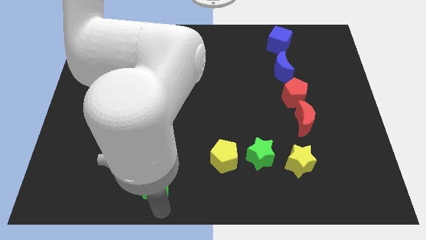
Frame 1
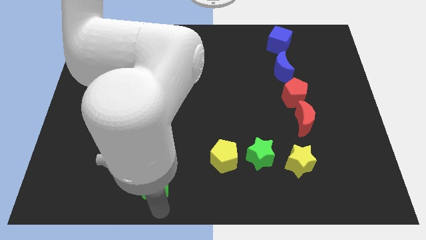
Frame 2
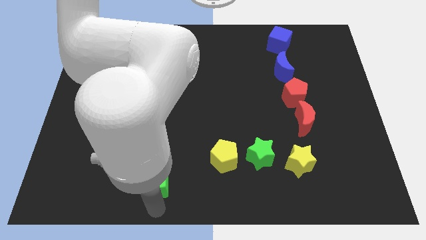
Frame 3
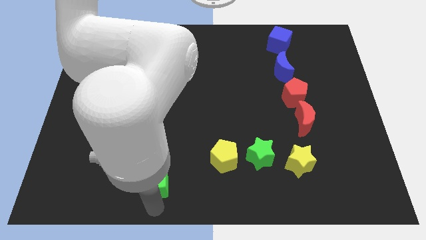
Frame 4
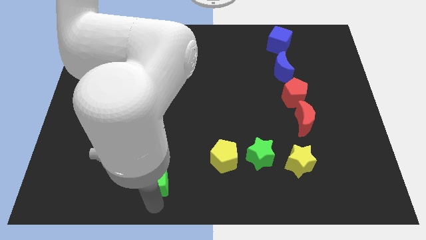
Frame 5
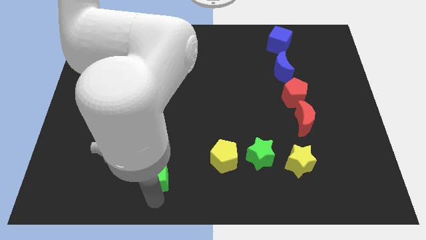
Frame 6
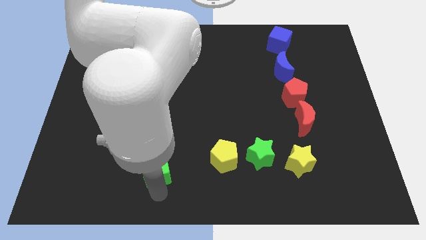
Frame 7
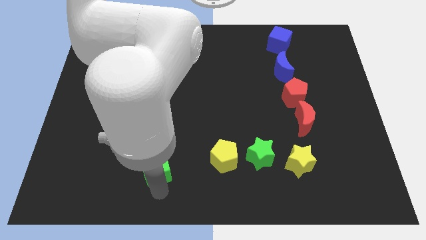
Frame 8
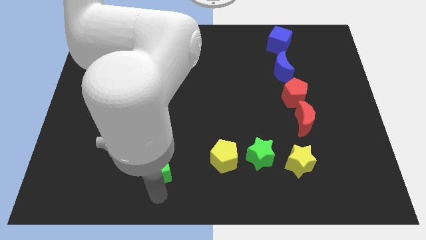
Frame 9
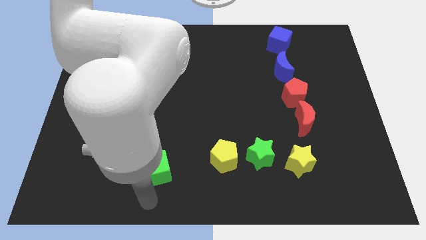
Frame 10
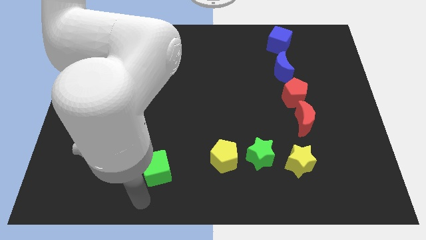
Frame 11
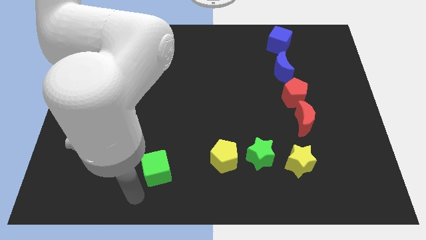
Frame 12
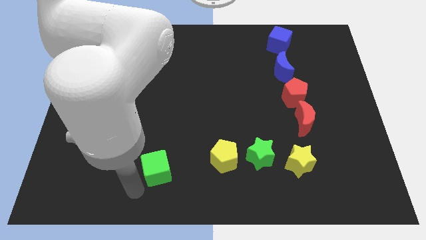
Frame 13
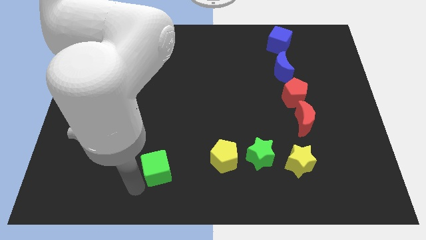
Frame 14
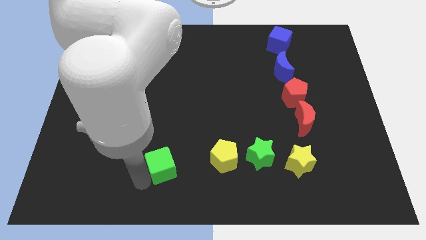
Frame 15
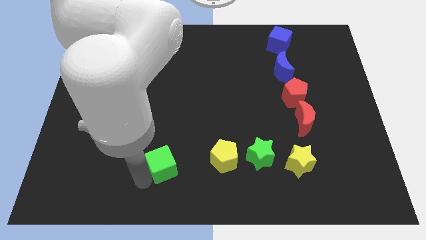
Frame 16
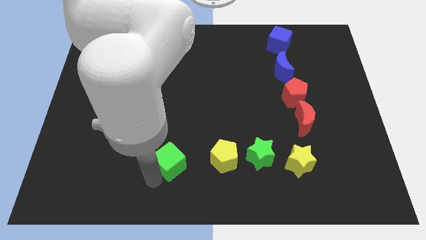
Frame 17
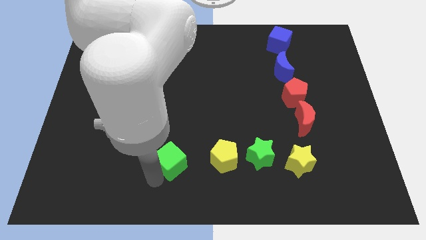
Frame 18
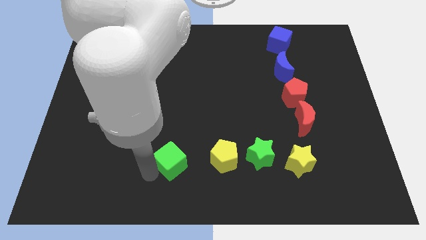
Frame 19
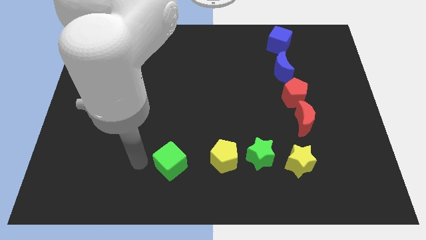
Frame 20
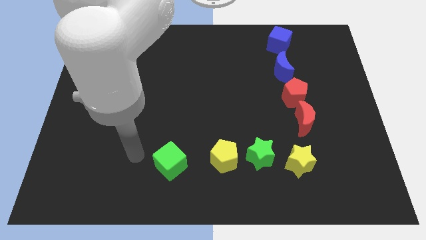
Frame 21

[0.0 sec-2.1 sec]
slide the green cube at the left side of the yellow pentagon

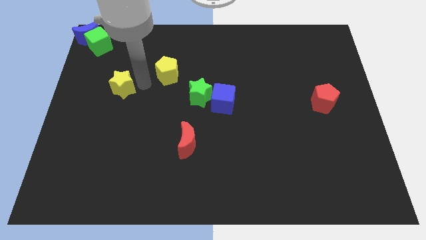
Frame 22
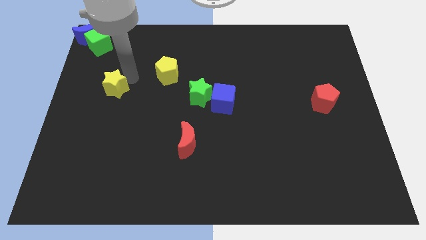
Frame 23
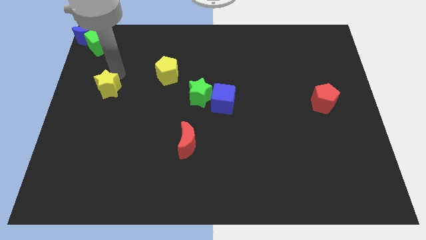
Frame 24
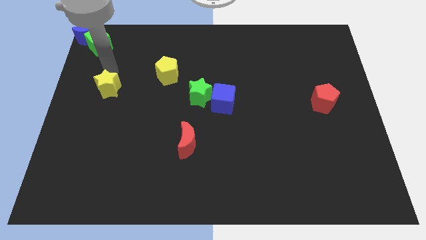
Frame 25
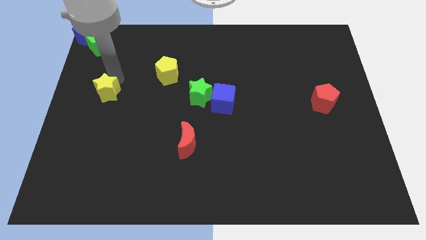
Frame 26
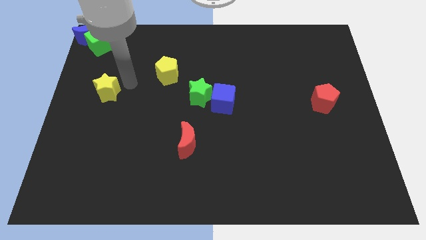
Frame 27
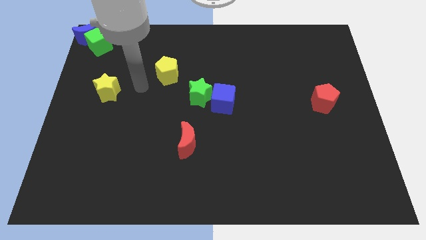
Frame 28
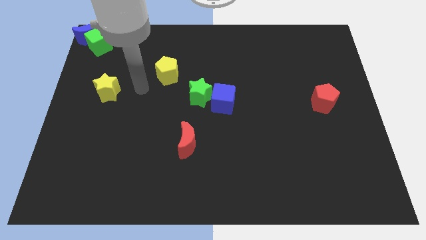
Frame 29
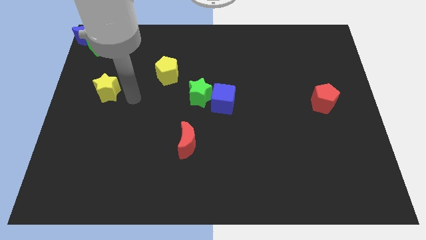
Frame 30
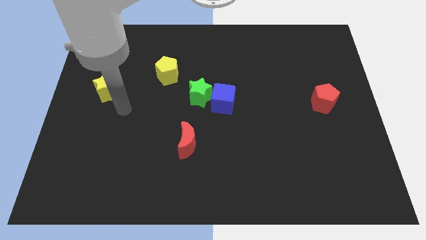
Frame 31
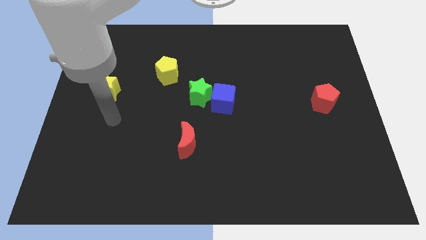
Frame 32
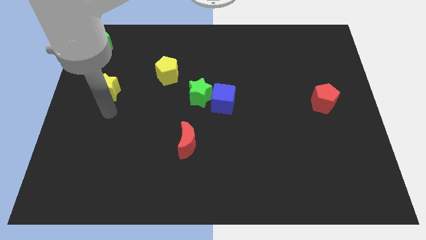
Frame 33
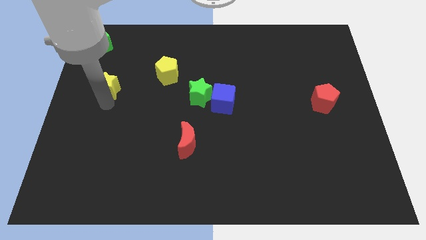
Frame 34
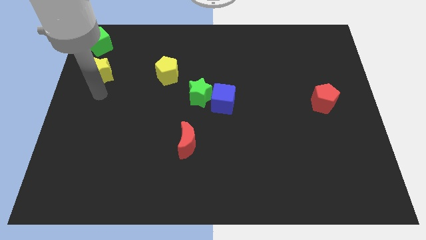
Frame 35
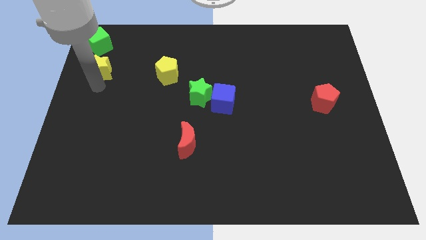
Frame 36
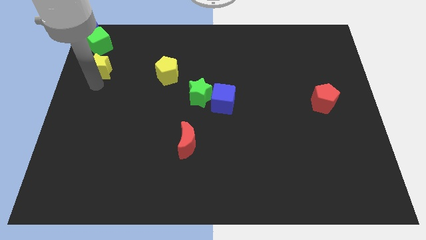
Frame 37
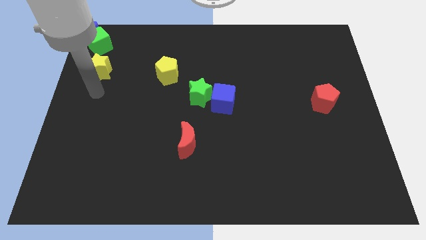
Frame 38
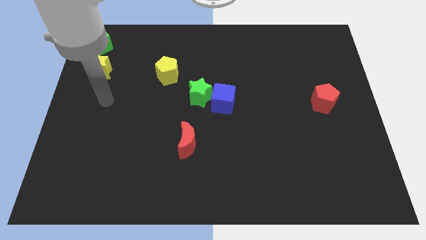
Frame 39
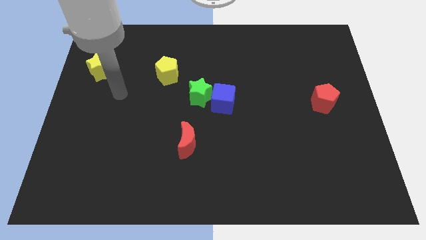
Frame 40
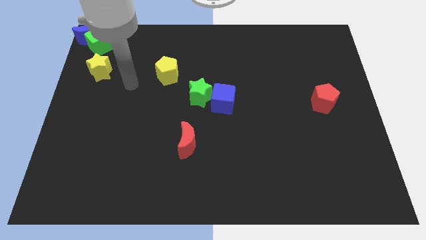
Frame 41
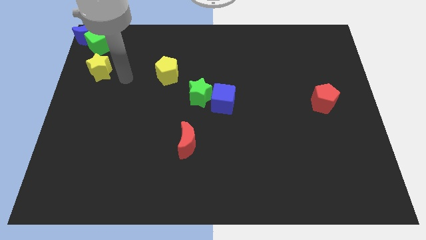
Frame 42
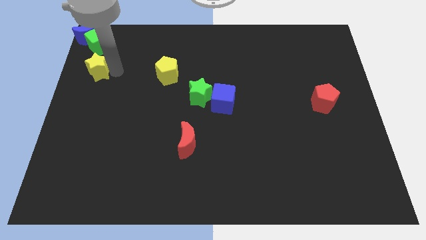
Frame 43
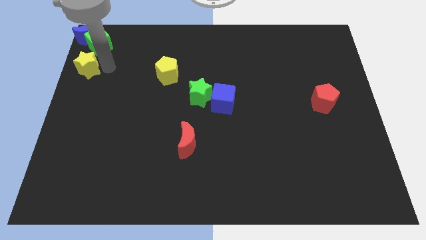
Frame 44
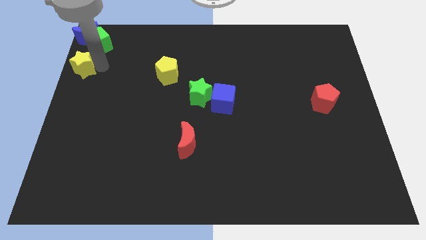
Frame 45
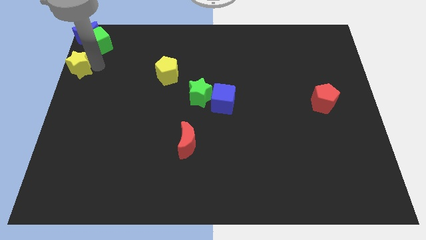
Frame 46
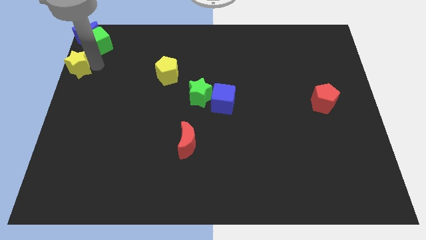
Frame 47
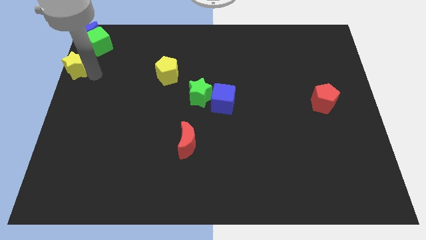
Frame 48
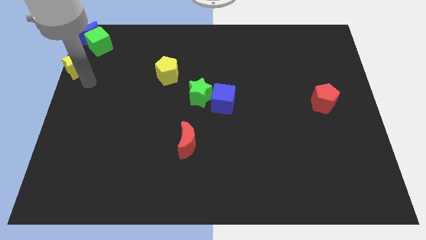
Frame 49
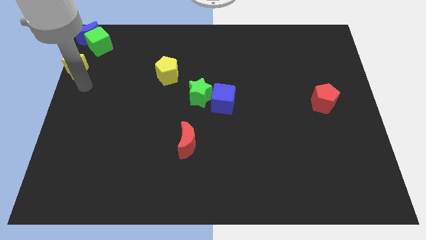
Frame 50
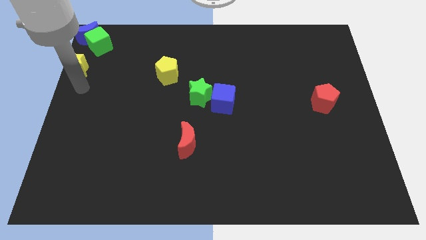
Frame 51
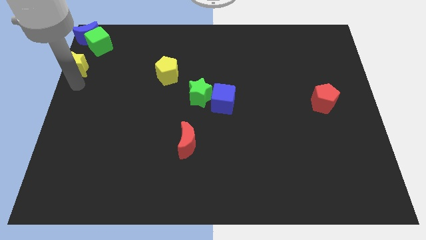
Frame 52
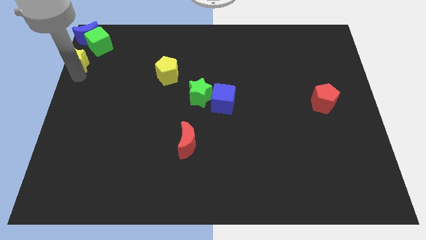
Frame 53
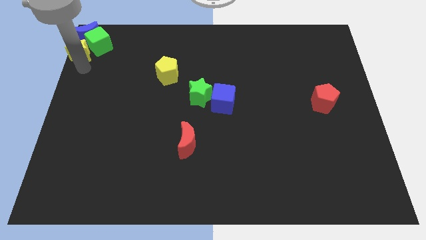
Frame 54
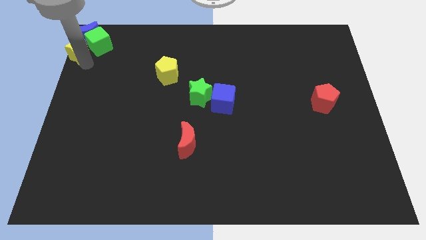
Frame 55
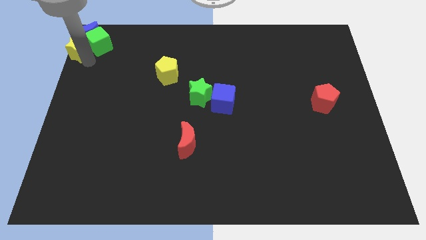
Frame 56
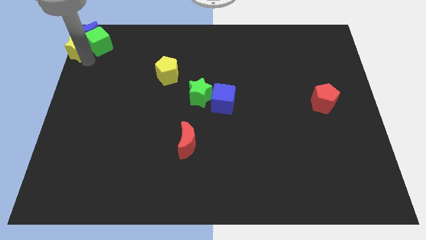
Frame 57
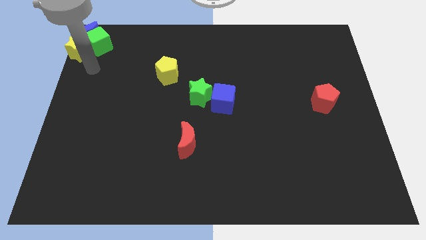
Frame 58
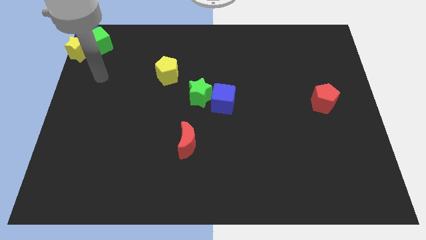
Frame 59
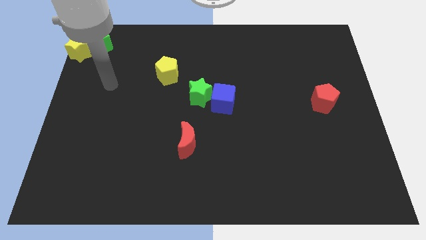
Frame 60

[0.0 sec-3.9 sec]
push the yellow star into the blue crescent

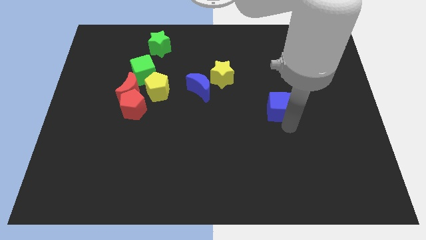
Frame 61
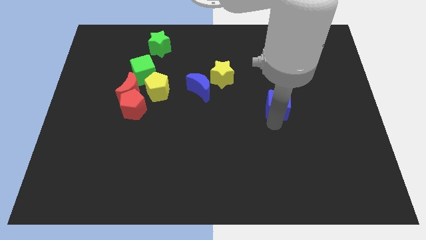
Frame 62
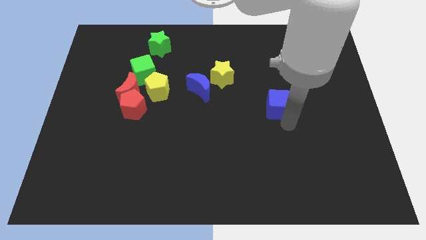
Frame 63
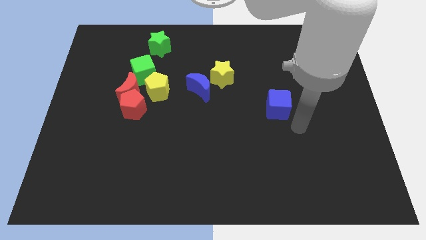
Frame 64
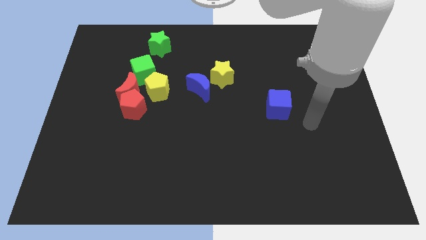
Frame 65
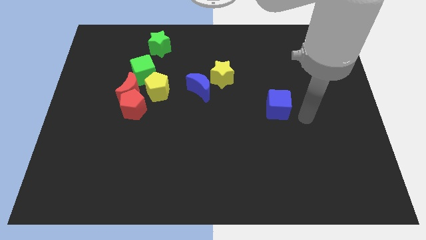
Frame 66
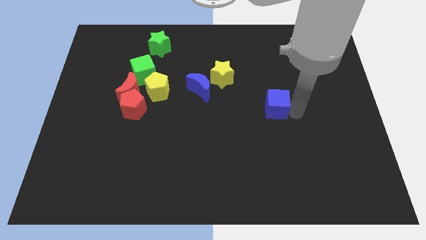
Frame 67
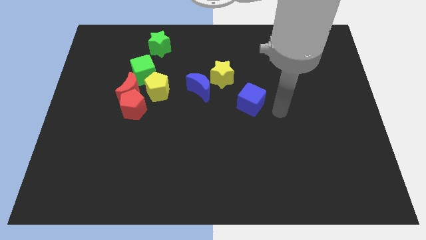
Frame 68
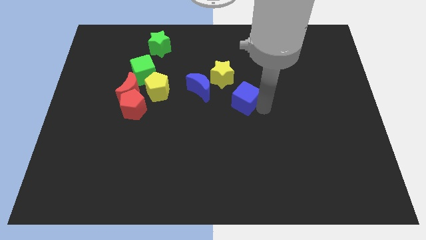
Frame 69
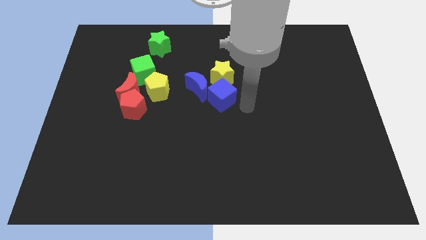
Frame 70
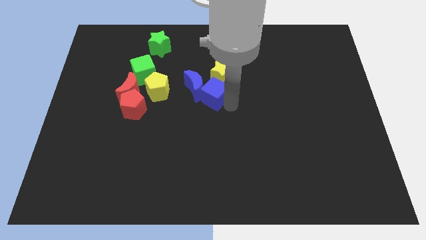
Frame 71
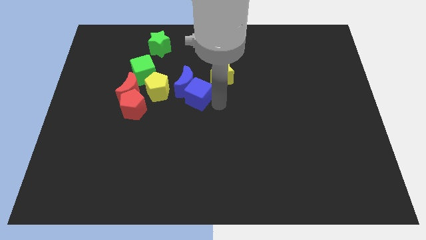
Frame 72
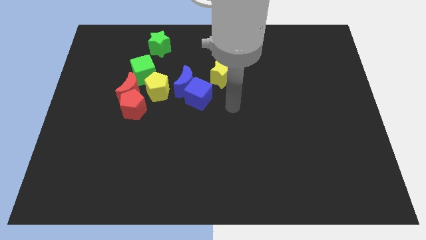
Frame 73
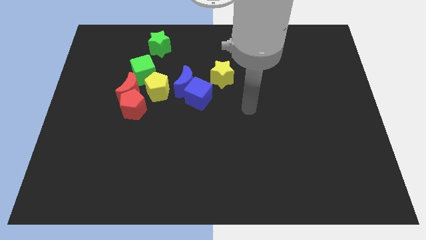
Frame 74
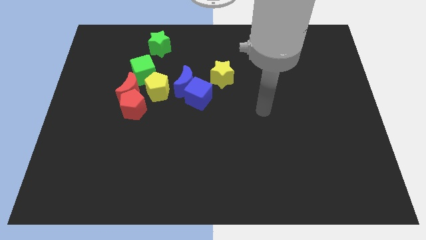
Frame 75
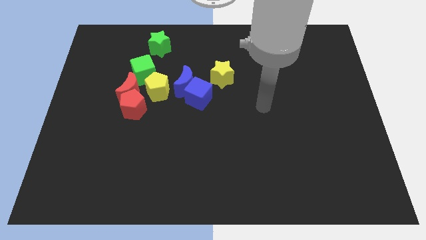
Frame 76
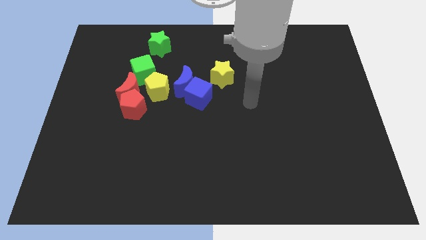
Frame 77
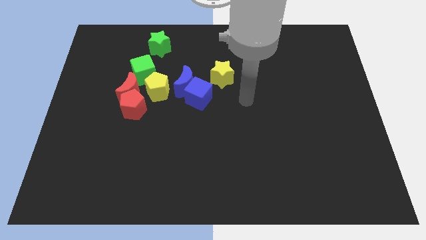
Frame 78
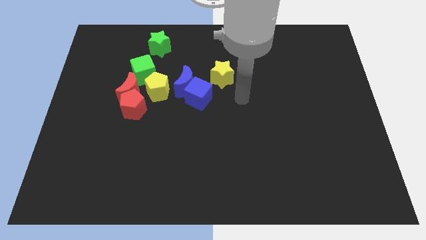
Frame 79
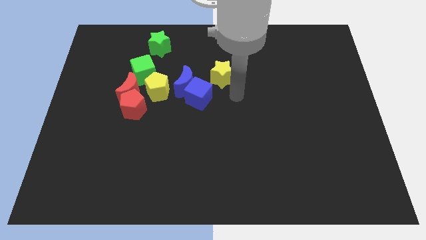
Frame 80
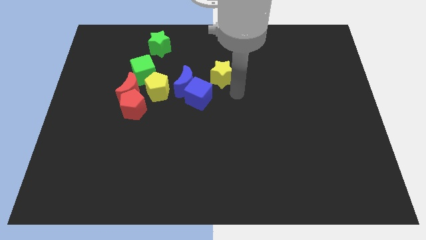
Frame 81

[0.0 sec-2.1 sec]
push blue cube towards the blue half moon

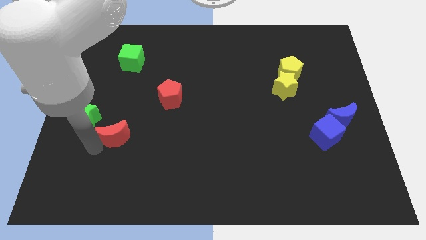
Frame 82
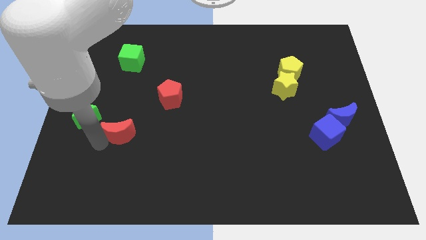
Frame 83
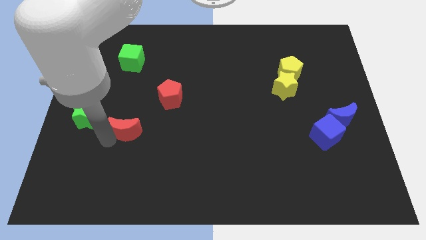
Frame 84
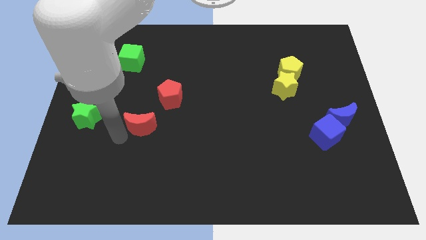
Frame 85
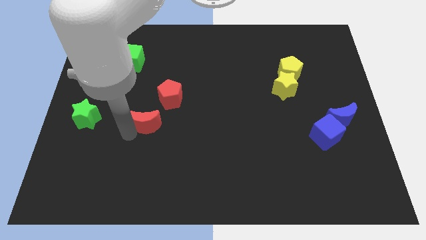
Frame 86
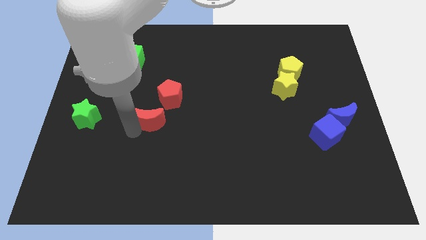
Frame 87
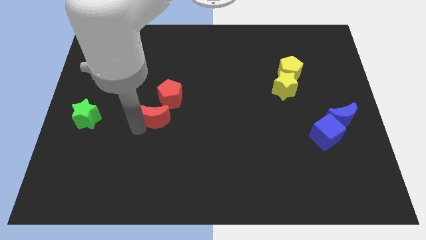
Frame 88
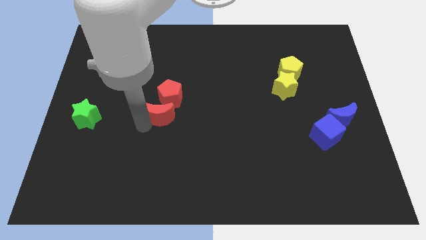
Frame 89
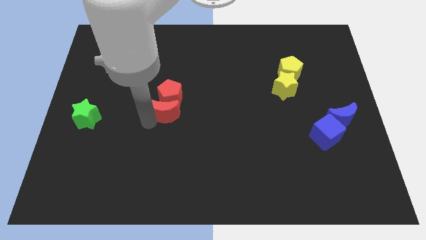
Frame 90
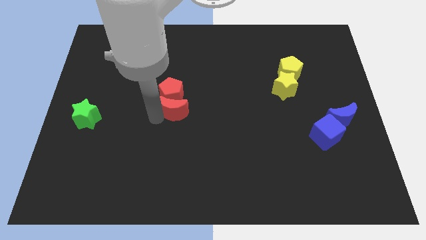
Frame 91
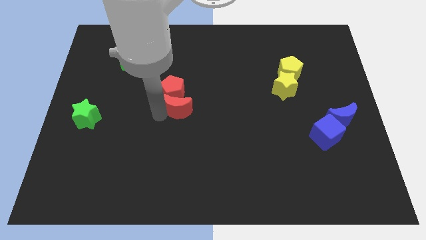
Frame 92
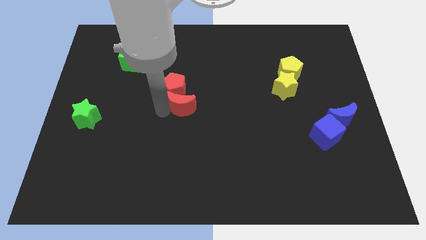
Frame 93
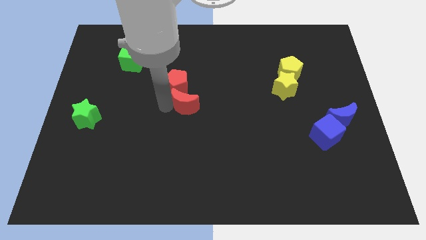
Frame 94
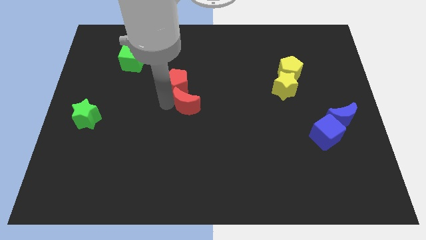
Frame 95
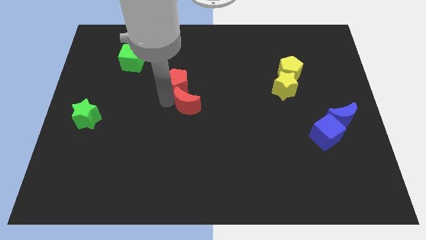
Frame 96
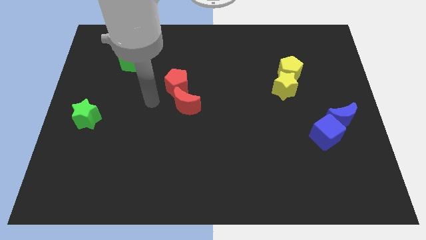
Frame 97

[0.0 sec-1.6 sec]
push the red moon into the red pentagon
